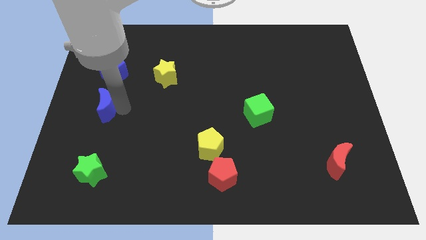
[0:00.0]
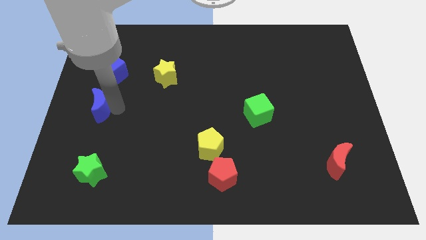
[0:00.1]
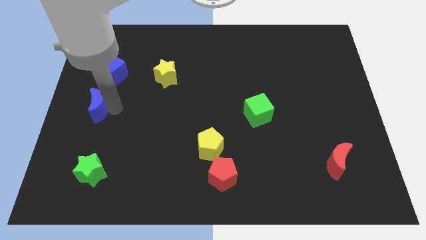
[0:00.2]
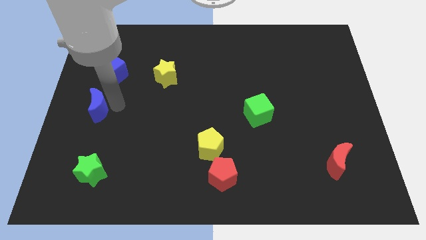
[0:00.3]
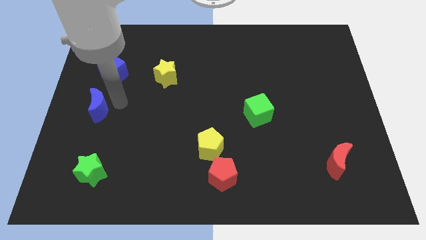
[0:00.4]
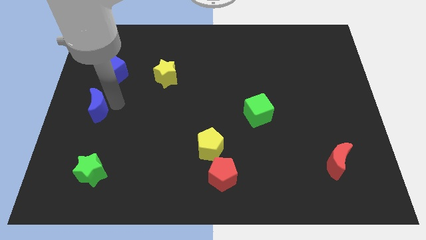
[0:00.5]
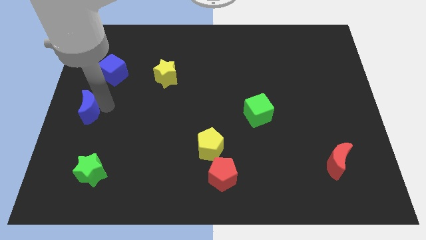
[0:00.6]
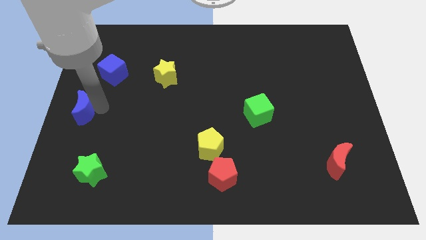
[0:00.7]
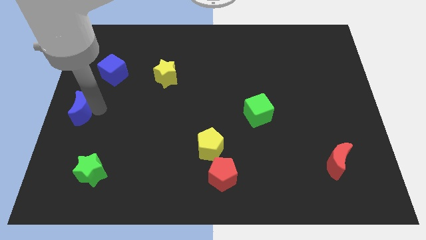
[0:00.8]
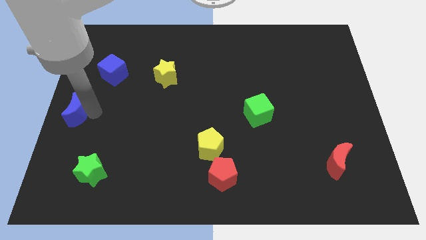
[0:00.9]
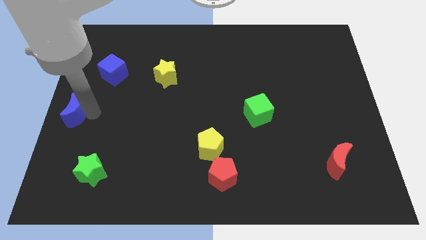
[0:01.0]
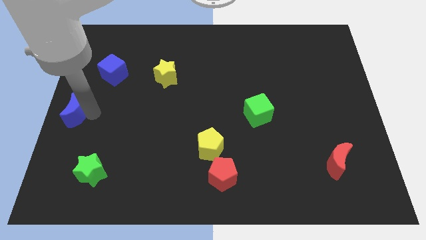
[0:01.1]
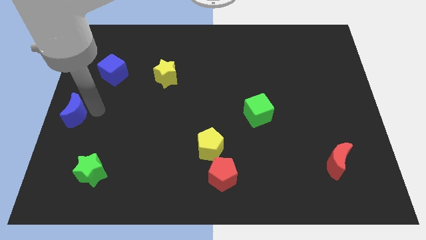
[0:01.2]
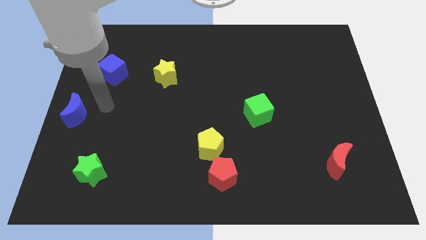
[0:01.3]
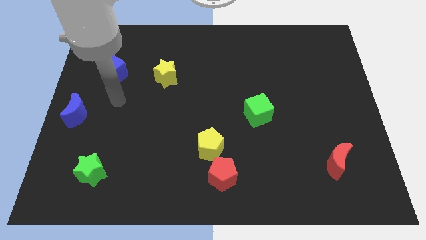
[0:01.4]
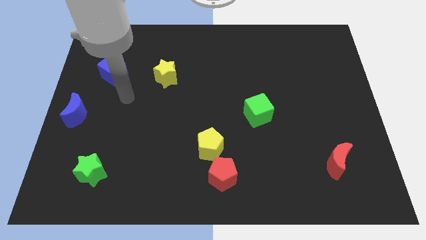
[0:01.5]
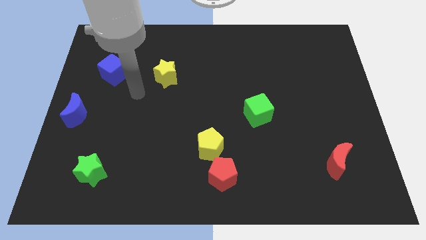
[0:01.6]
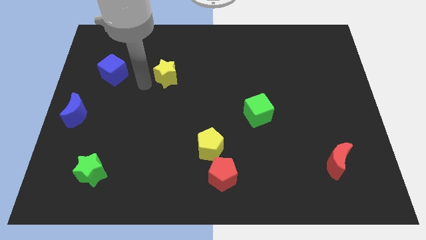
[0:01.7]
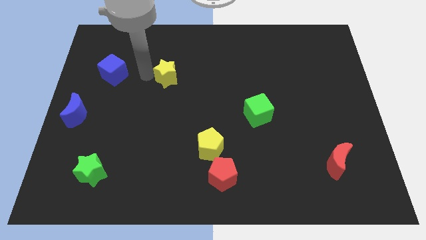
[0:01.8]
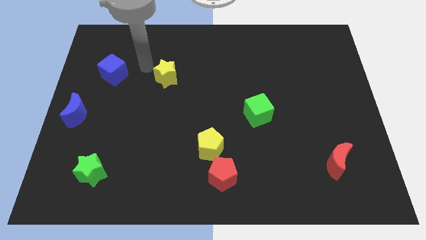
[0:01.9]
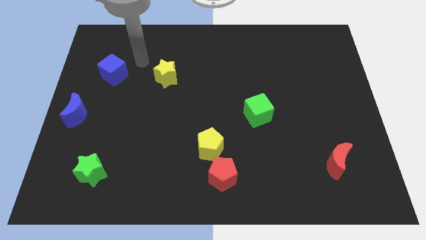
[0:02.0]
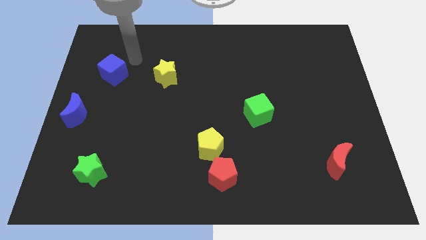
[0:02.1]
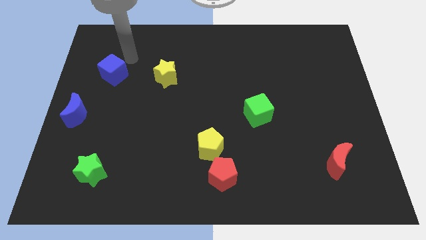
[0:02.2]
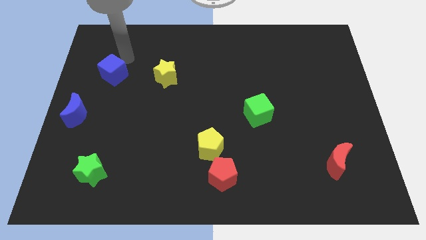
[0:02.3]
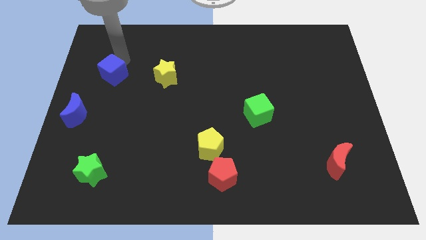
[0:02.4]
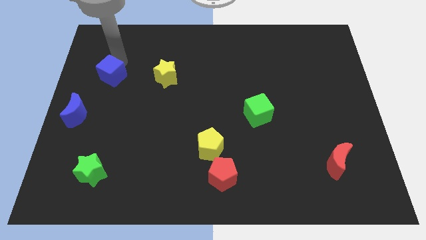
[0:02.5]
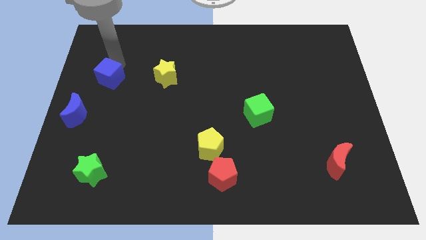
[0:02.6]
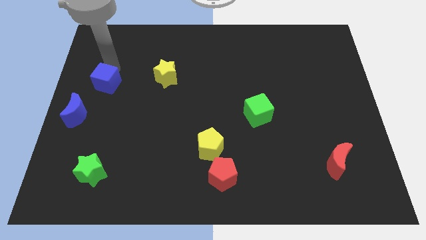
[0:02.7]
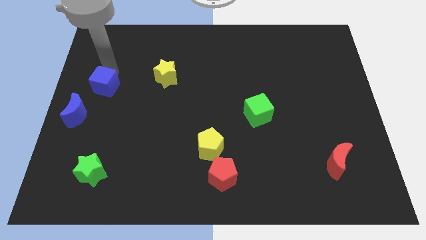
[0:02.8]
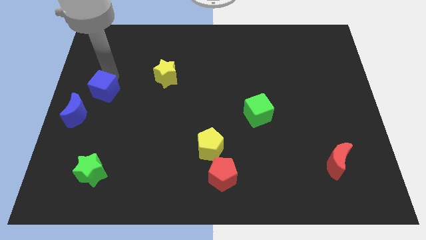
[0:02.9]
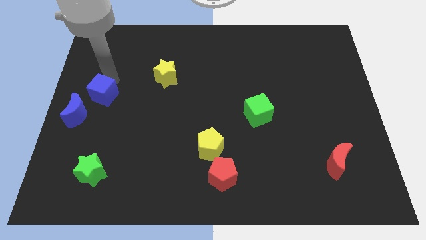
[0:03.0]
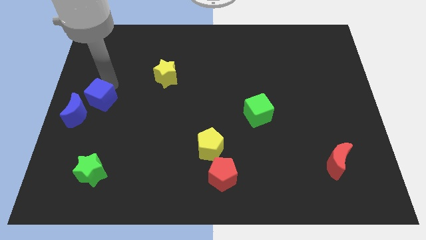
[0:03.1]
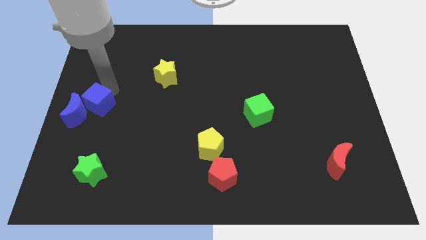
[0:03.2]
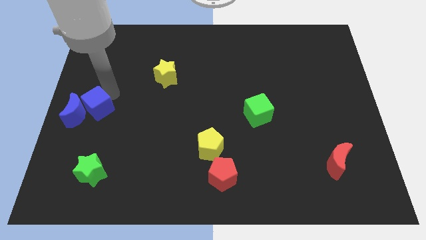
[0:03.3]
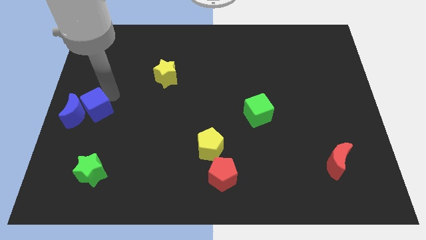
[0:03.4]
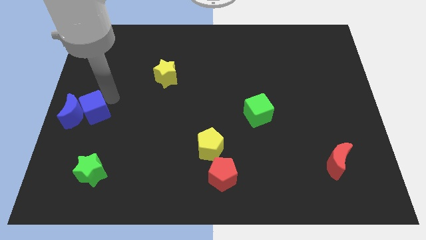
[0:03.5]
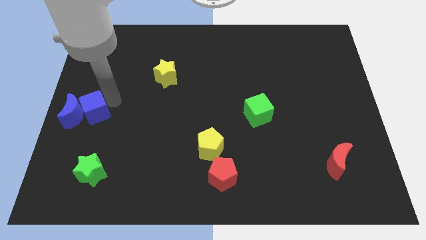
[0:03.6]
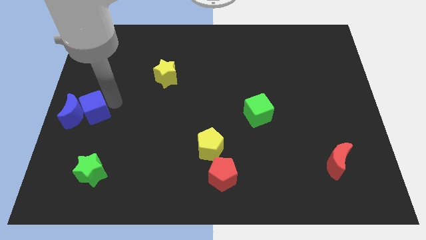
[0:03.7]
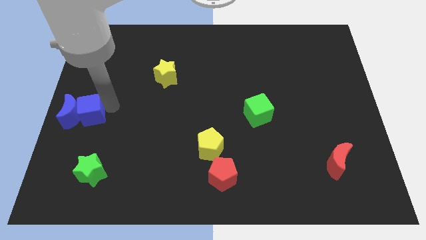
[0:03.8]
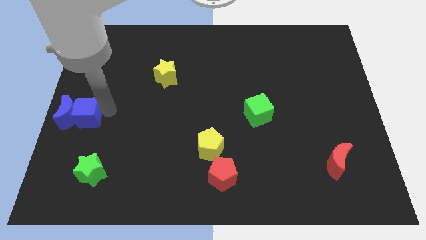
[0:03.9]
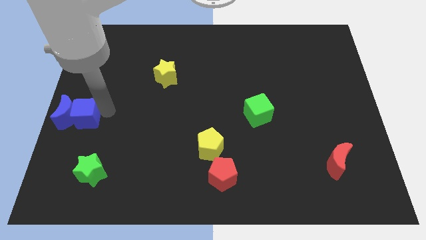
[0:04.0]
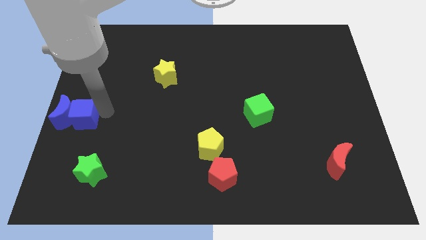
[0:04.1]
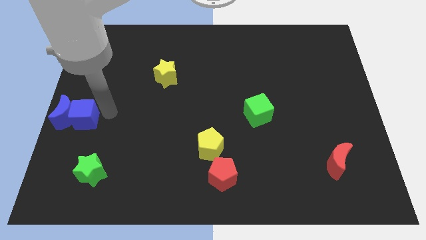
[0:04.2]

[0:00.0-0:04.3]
put both the blue blocks to the center left of the board

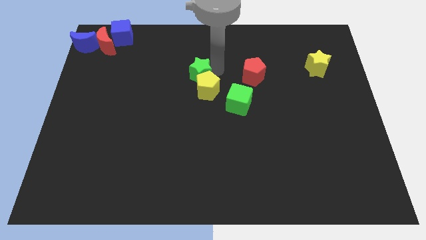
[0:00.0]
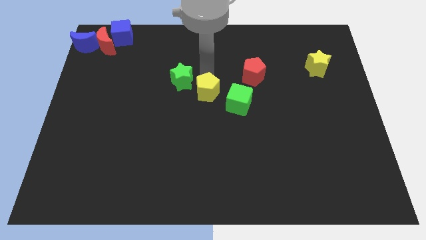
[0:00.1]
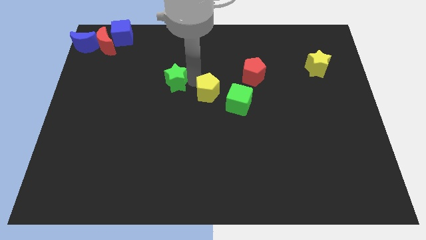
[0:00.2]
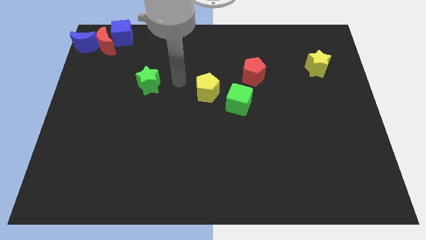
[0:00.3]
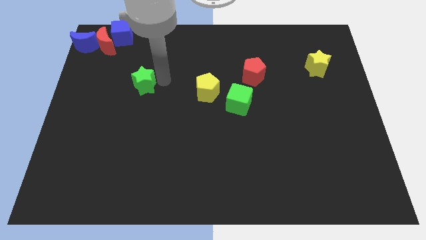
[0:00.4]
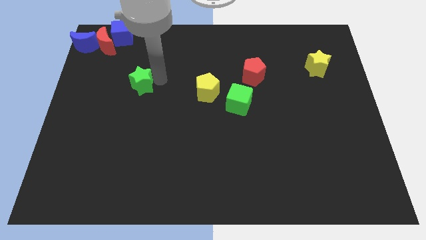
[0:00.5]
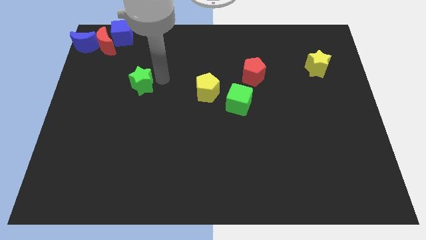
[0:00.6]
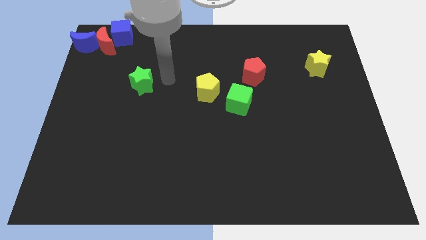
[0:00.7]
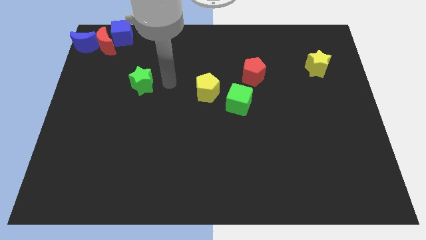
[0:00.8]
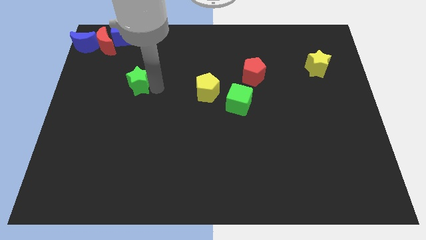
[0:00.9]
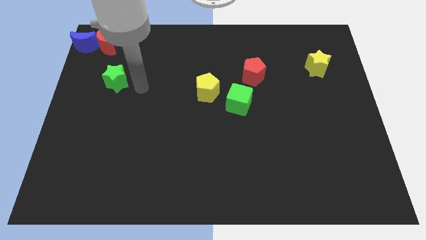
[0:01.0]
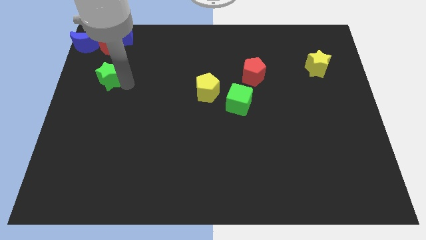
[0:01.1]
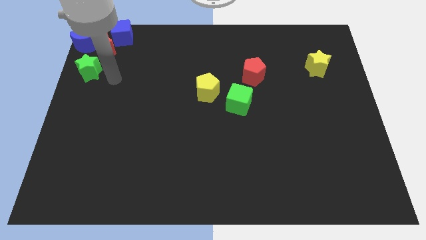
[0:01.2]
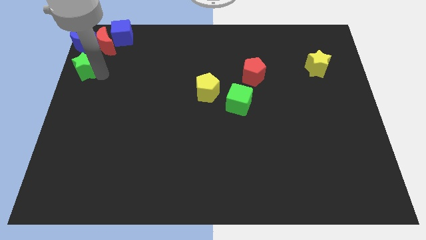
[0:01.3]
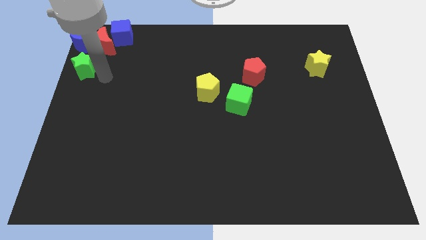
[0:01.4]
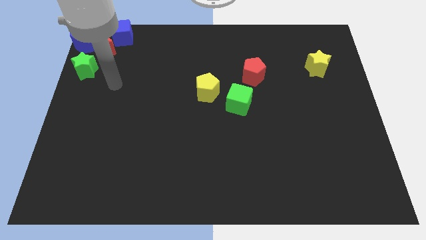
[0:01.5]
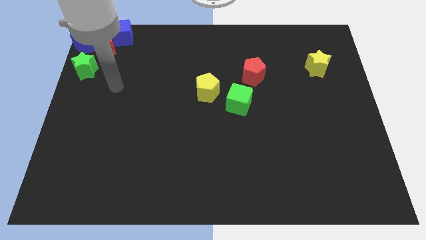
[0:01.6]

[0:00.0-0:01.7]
push the green star towards the bottom of the blue crescent

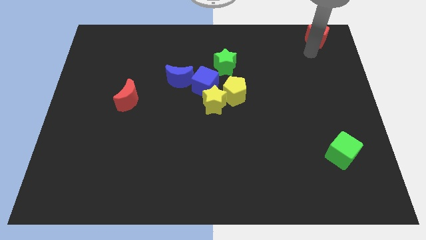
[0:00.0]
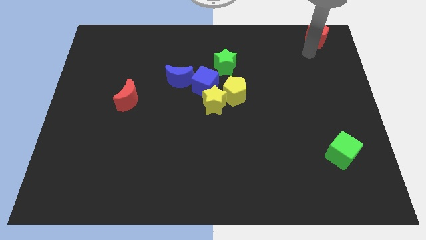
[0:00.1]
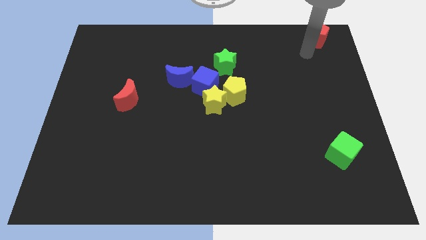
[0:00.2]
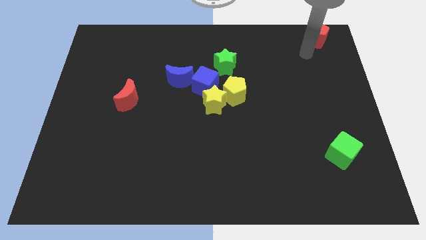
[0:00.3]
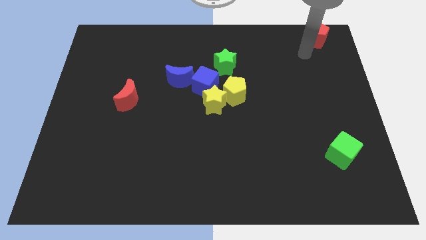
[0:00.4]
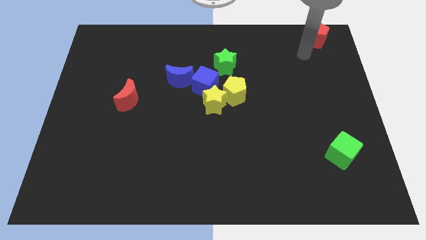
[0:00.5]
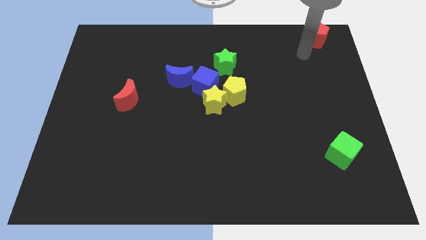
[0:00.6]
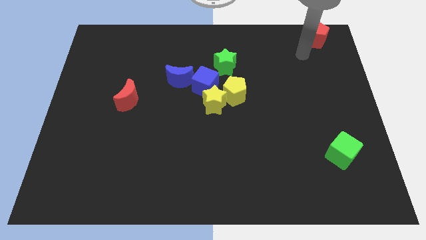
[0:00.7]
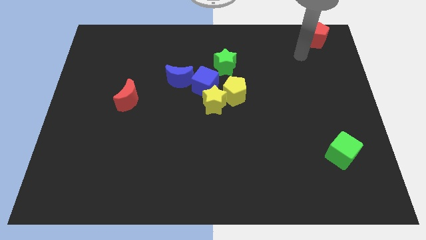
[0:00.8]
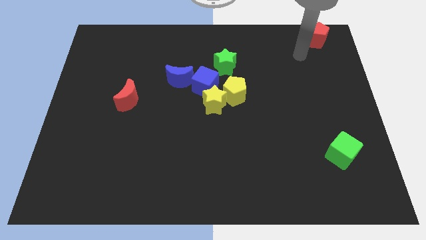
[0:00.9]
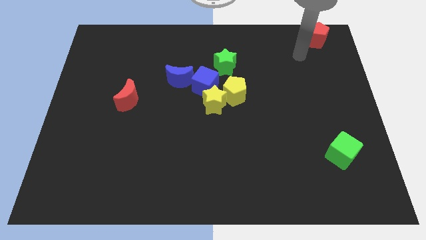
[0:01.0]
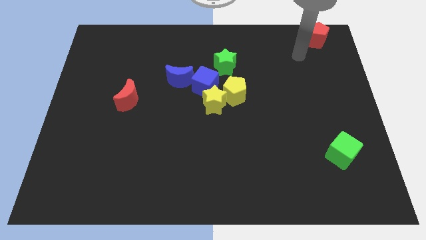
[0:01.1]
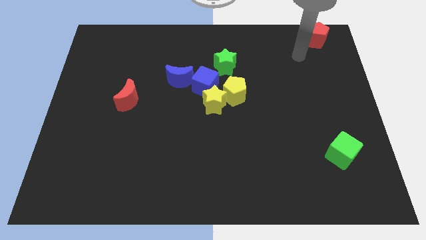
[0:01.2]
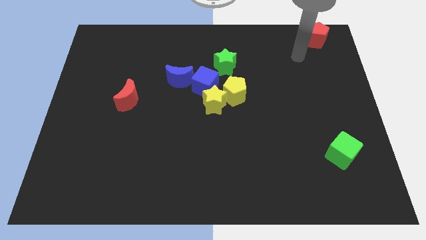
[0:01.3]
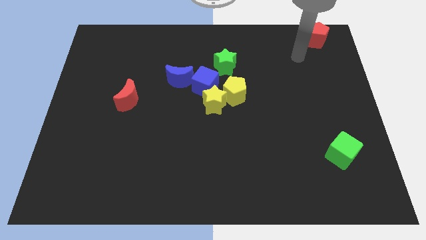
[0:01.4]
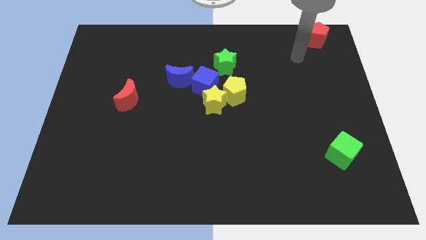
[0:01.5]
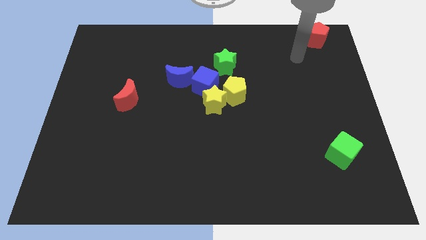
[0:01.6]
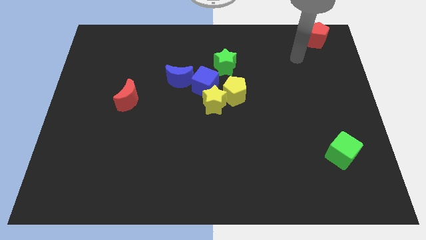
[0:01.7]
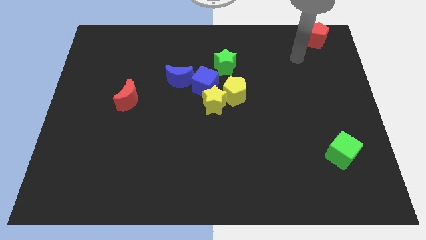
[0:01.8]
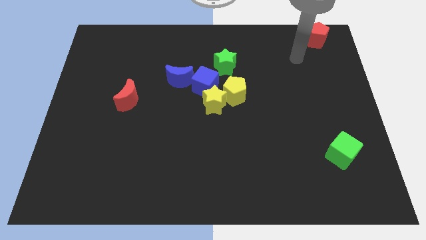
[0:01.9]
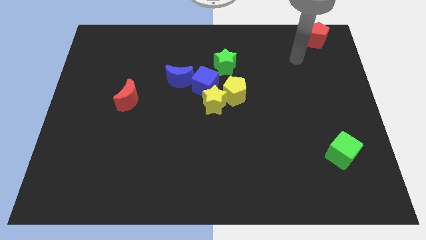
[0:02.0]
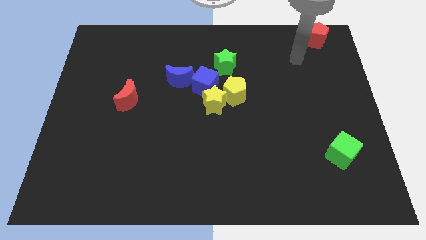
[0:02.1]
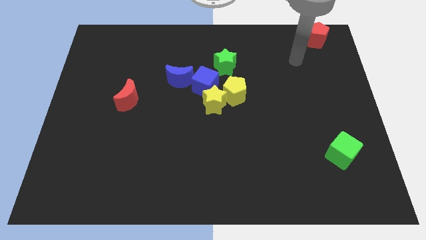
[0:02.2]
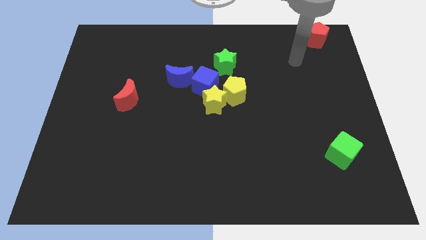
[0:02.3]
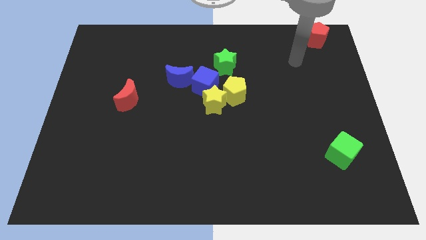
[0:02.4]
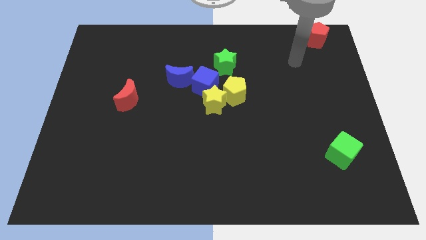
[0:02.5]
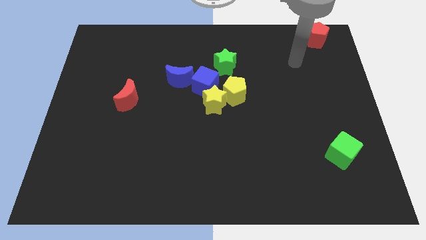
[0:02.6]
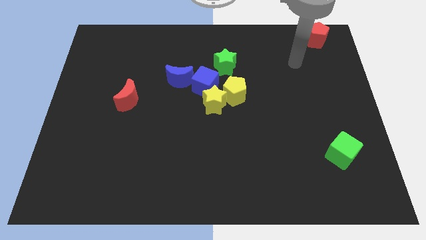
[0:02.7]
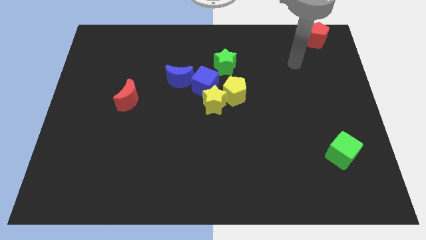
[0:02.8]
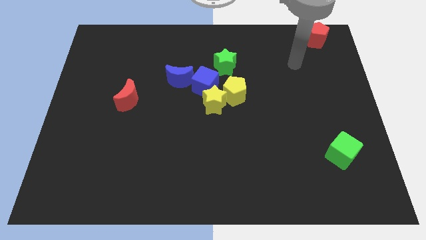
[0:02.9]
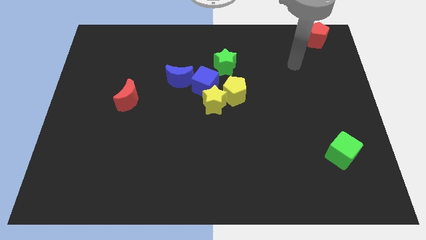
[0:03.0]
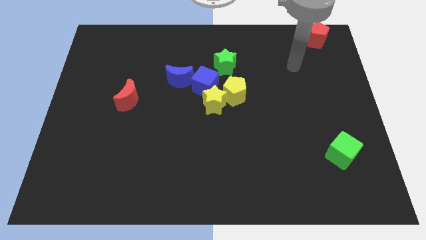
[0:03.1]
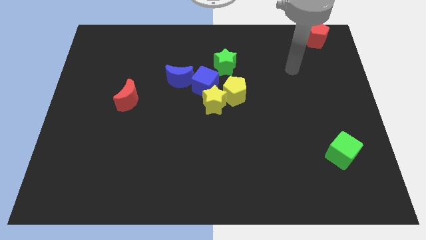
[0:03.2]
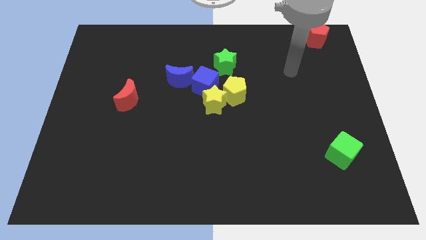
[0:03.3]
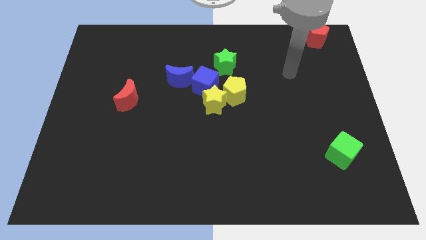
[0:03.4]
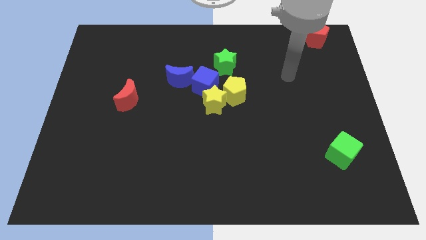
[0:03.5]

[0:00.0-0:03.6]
move the arm away from red pentagon
